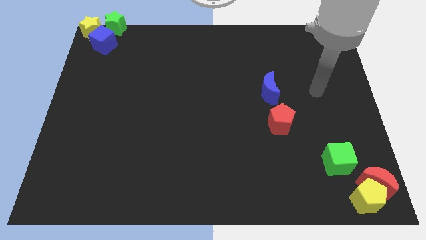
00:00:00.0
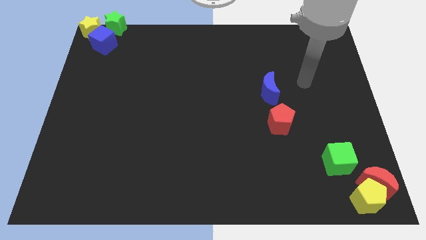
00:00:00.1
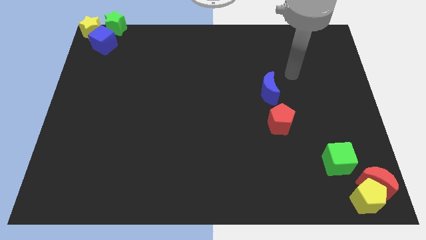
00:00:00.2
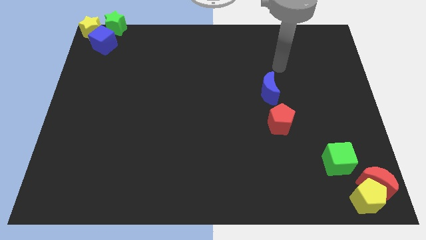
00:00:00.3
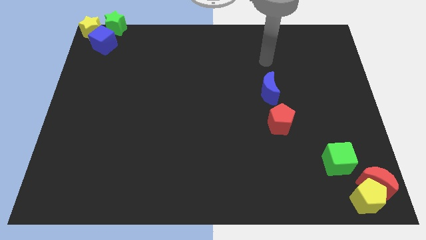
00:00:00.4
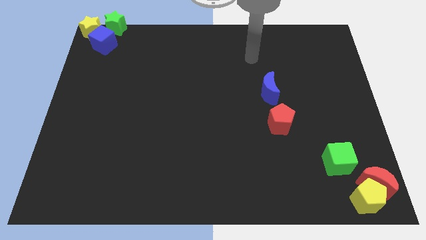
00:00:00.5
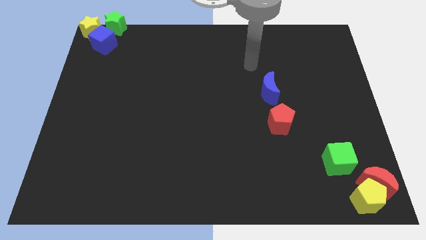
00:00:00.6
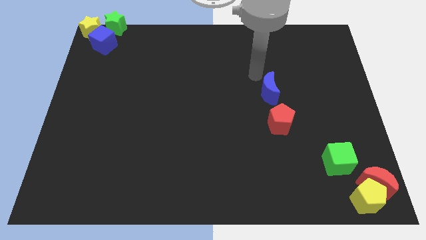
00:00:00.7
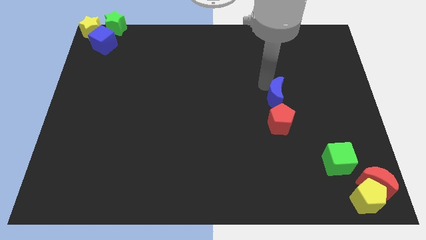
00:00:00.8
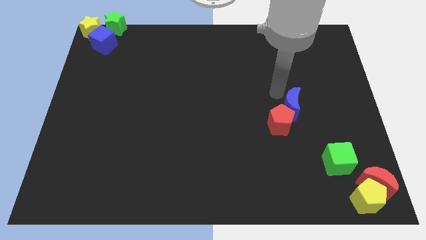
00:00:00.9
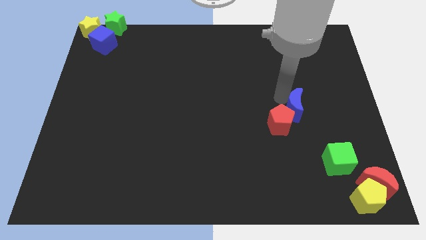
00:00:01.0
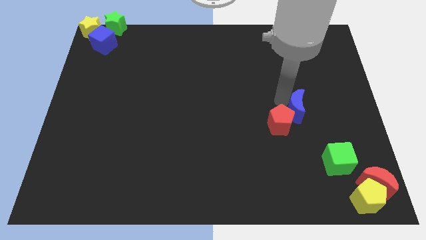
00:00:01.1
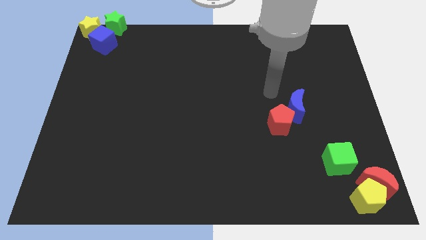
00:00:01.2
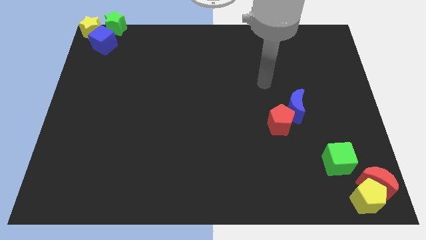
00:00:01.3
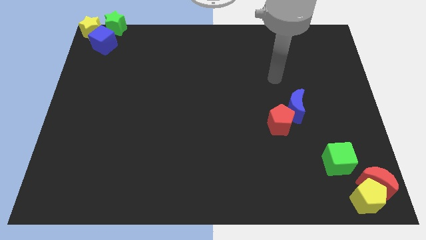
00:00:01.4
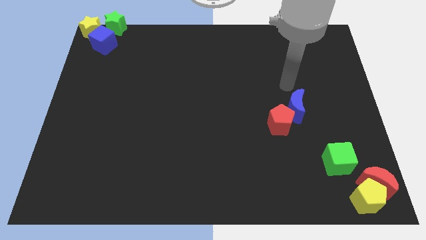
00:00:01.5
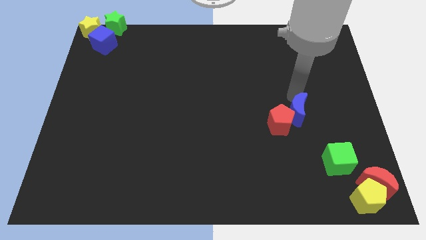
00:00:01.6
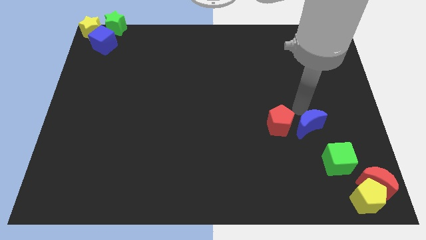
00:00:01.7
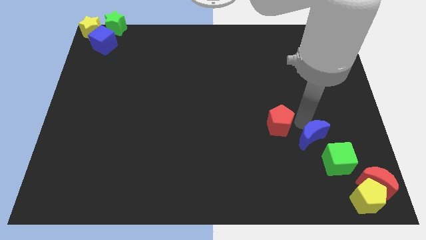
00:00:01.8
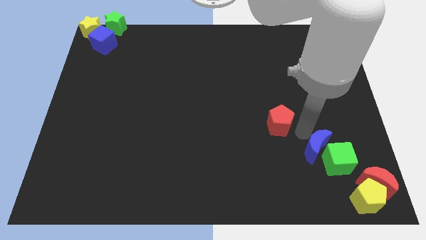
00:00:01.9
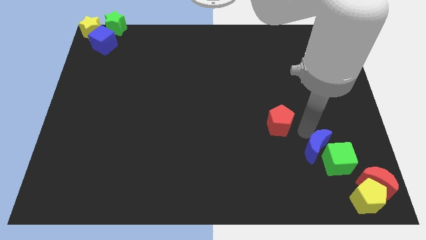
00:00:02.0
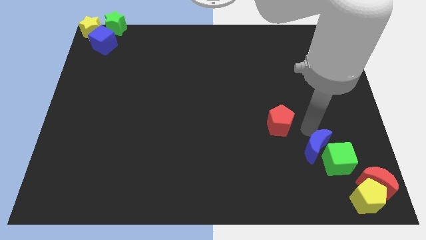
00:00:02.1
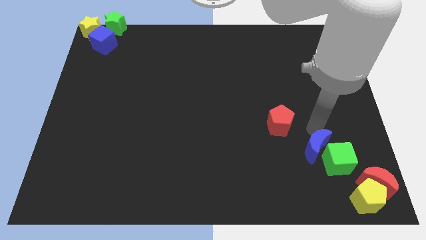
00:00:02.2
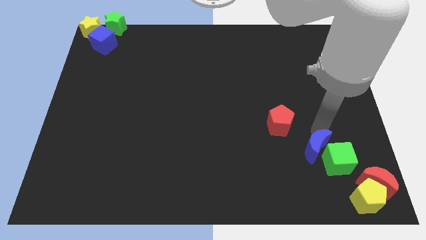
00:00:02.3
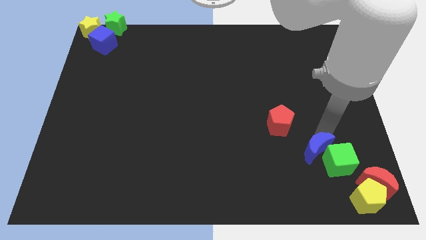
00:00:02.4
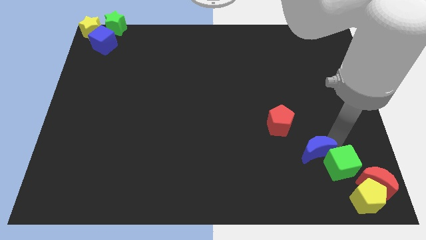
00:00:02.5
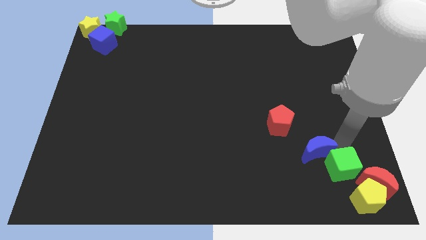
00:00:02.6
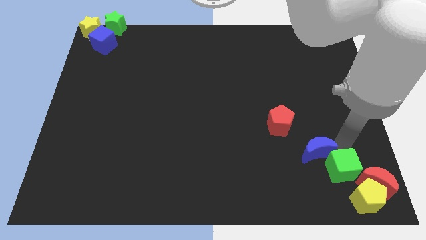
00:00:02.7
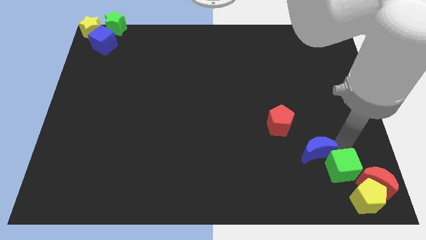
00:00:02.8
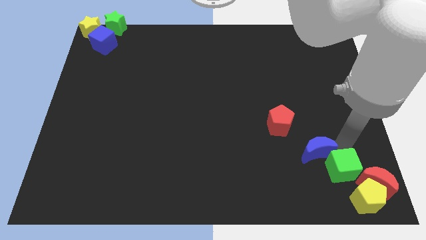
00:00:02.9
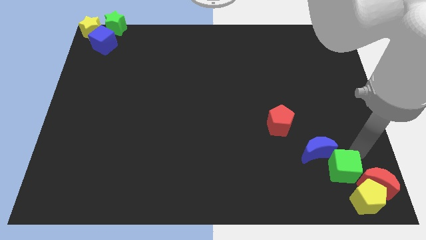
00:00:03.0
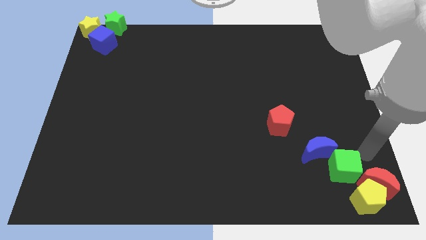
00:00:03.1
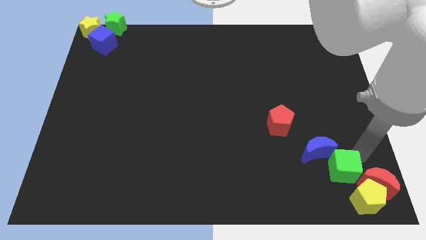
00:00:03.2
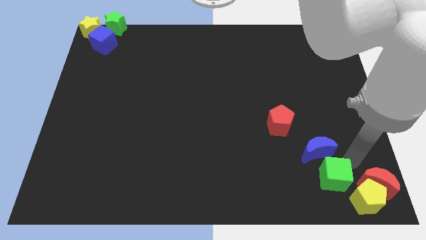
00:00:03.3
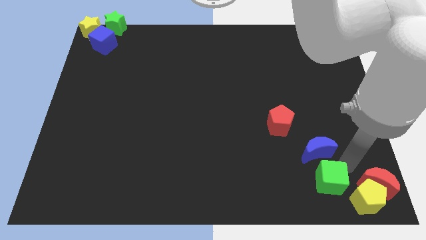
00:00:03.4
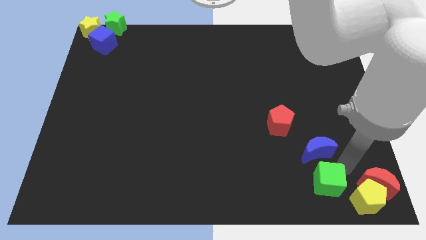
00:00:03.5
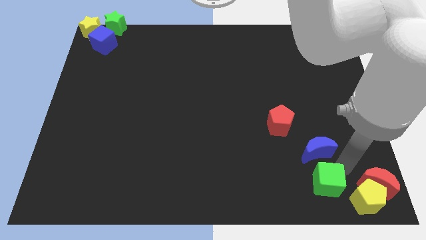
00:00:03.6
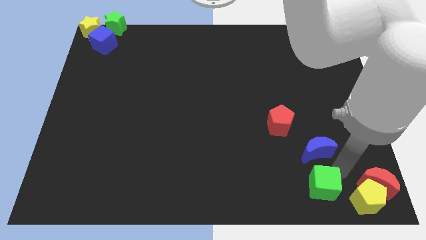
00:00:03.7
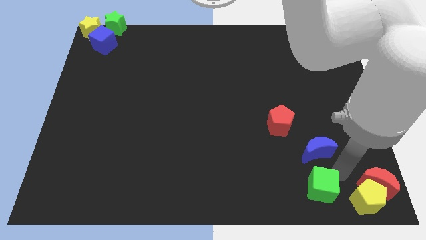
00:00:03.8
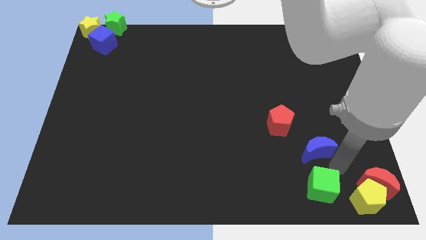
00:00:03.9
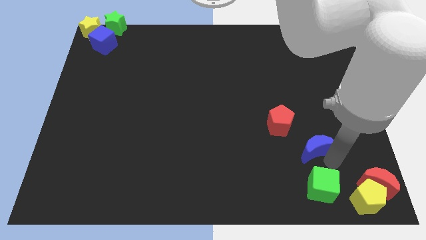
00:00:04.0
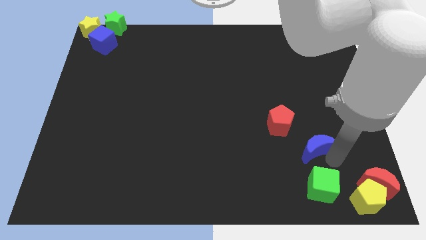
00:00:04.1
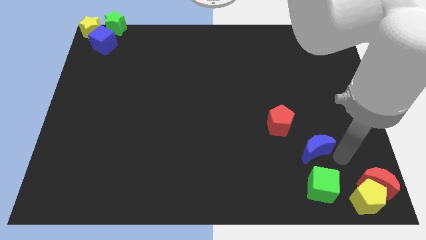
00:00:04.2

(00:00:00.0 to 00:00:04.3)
push the blue crescent and green cube vertical to each other

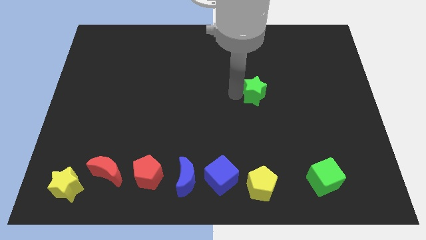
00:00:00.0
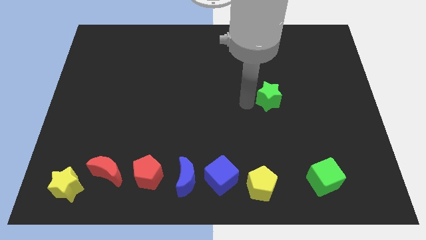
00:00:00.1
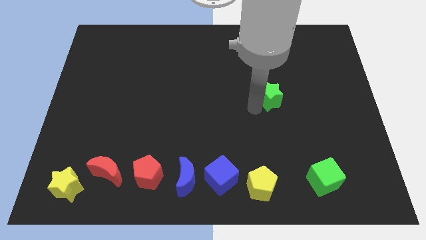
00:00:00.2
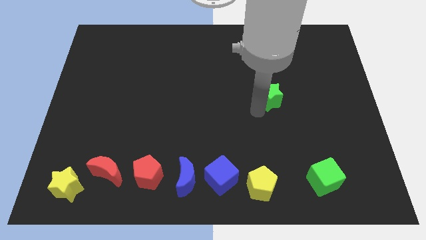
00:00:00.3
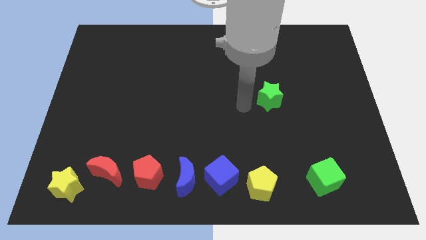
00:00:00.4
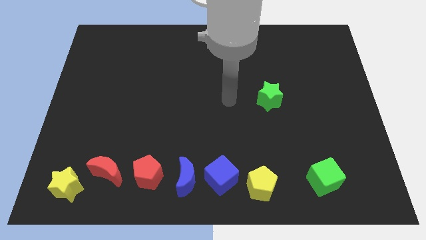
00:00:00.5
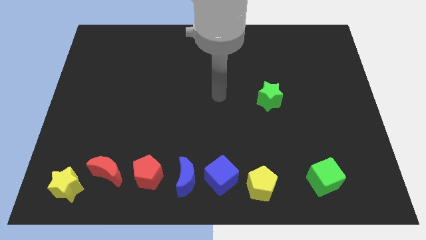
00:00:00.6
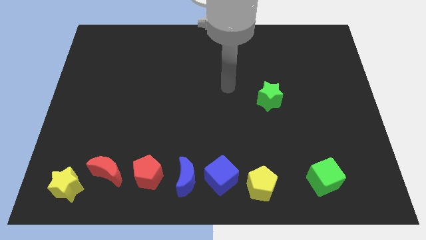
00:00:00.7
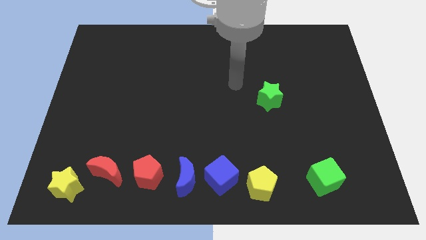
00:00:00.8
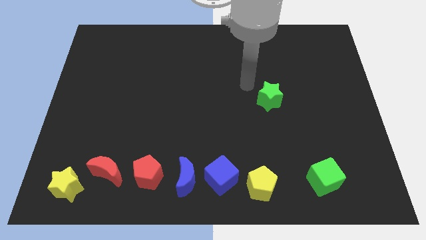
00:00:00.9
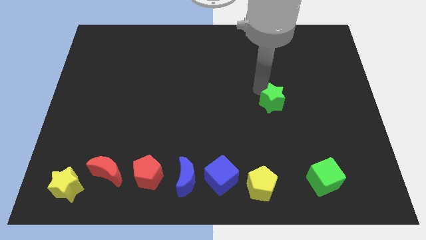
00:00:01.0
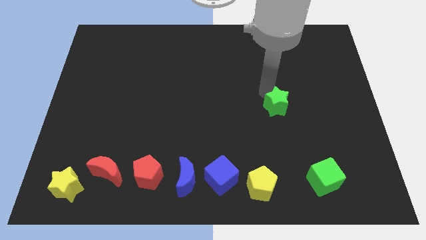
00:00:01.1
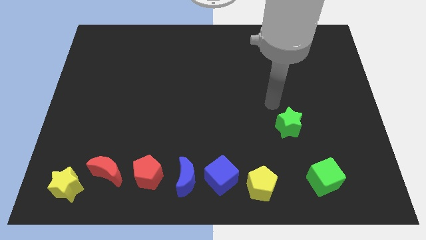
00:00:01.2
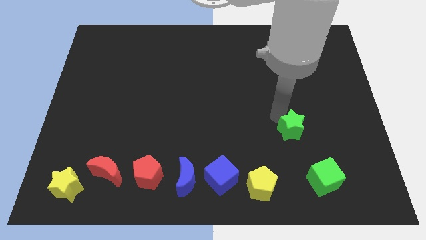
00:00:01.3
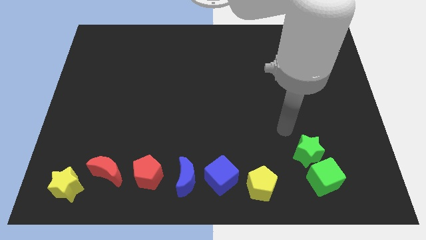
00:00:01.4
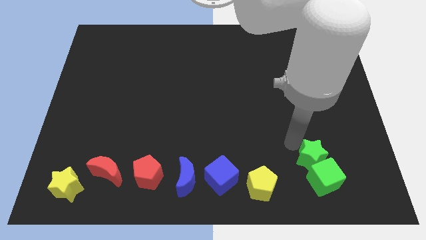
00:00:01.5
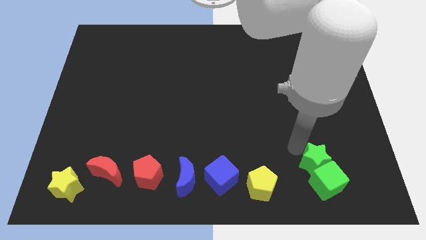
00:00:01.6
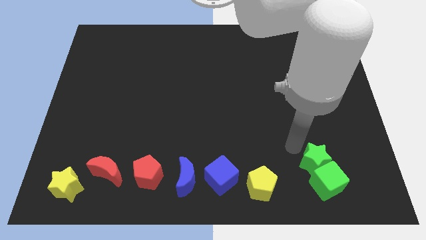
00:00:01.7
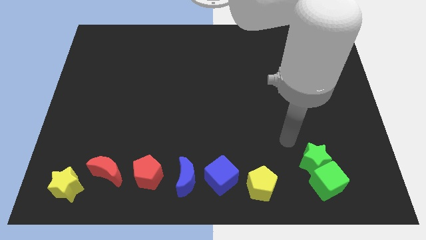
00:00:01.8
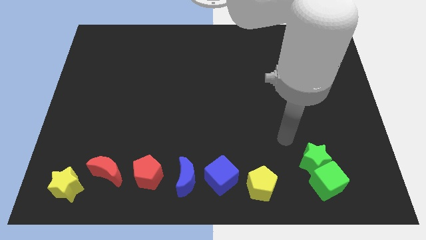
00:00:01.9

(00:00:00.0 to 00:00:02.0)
slide the green star into the green cube

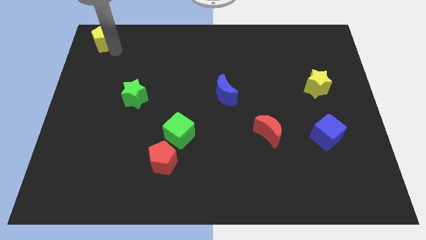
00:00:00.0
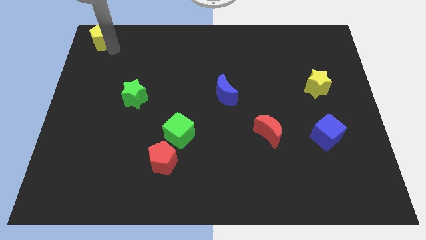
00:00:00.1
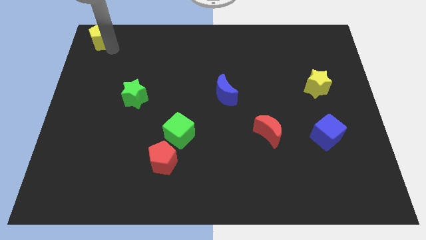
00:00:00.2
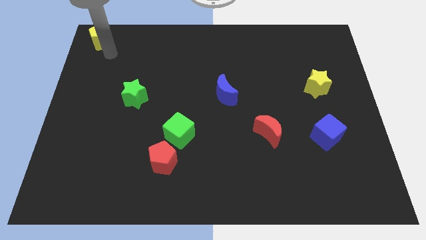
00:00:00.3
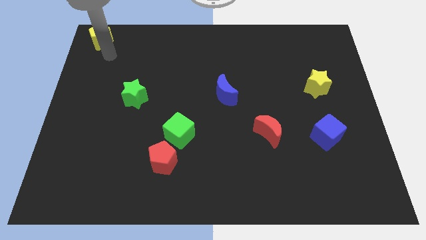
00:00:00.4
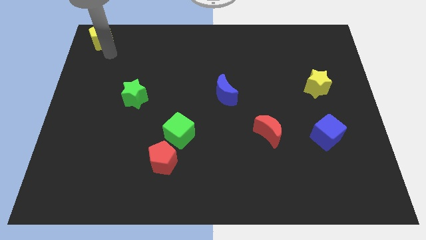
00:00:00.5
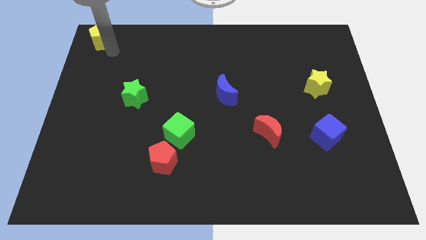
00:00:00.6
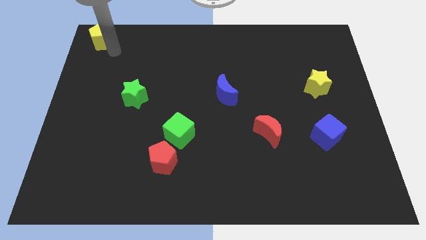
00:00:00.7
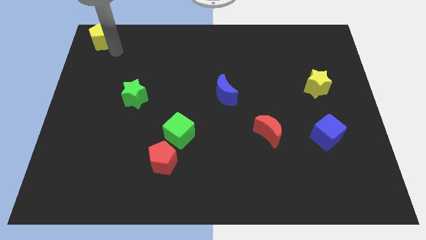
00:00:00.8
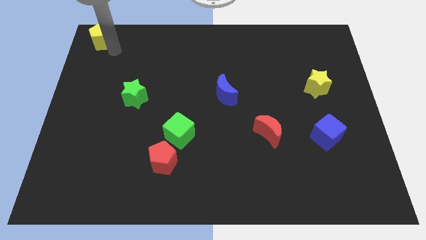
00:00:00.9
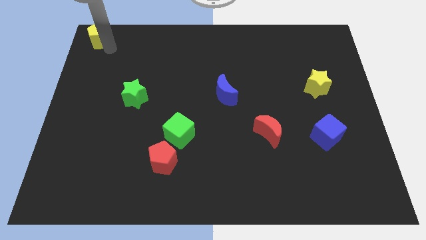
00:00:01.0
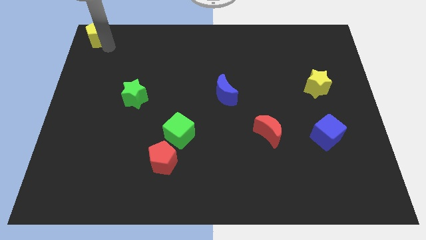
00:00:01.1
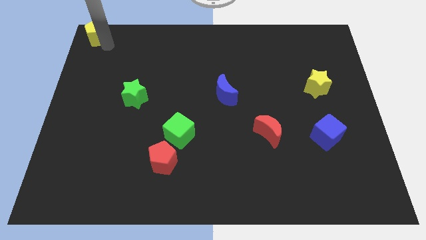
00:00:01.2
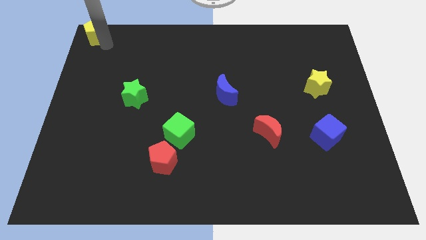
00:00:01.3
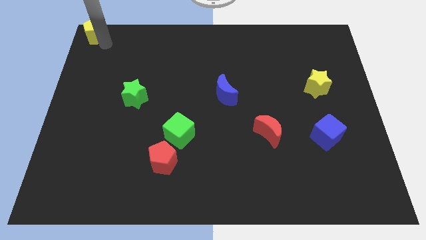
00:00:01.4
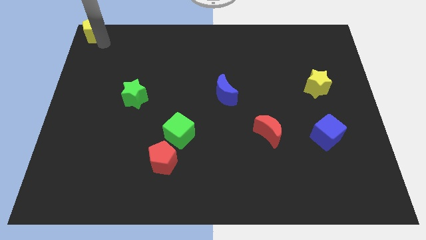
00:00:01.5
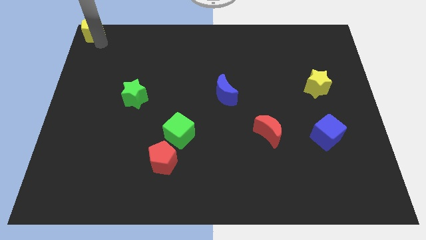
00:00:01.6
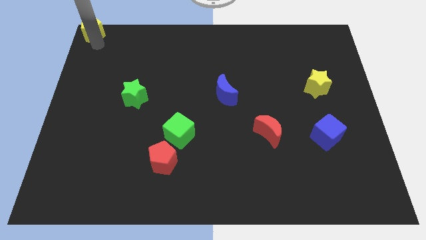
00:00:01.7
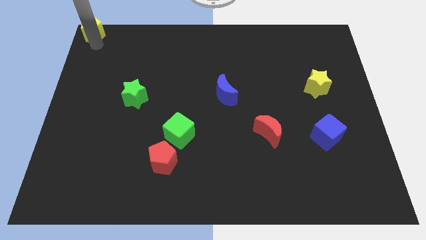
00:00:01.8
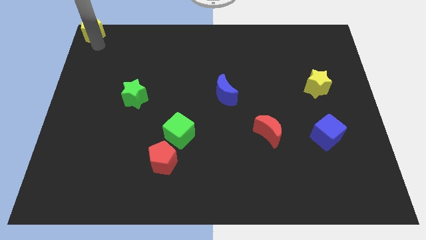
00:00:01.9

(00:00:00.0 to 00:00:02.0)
put the yellow pentagon at the top left corner of the board

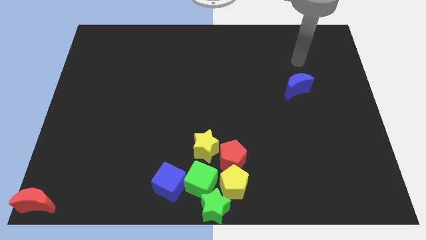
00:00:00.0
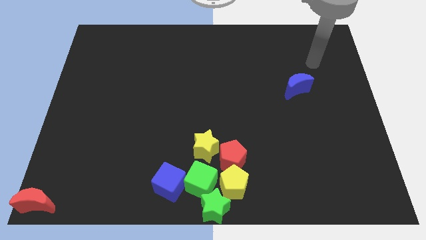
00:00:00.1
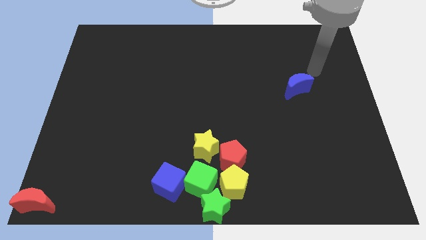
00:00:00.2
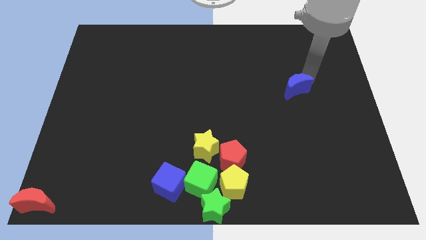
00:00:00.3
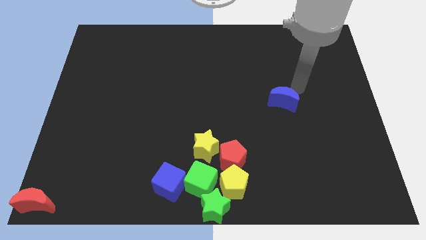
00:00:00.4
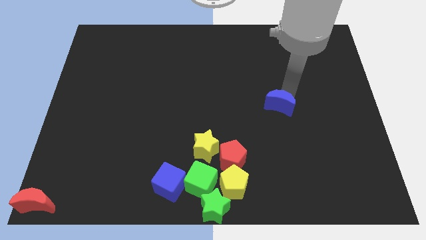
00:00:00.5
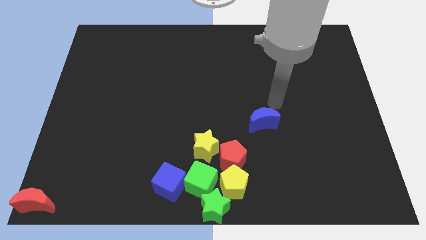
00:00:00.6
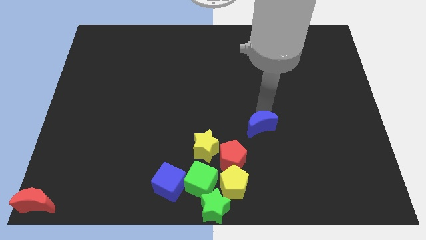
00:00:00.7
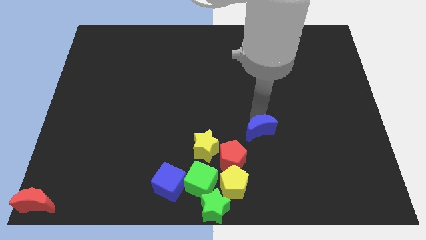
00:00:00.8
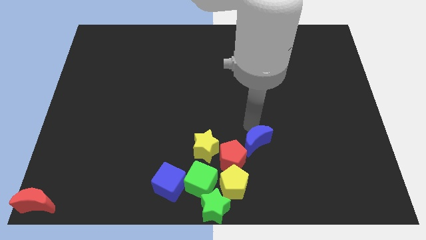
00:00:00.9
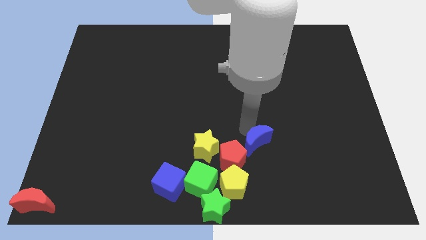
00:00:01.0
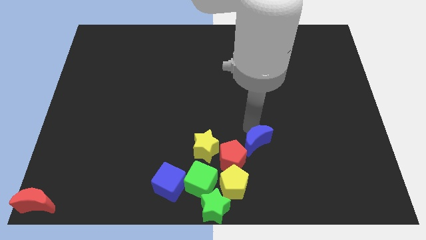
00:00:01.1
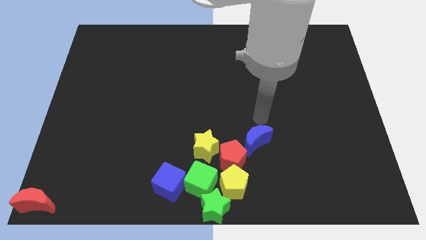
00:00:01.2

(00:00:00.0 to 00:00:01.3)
move the blue moon above the red pentagon
